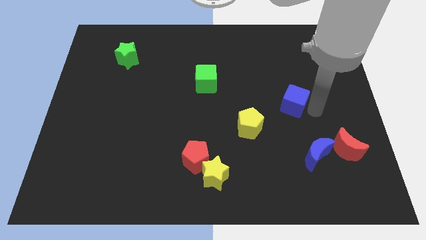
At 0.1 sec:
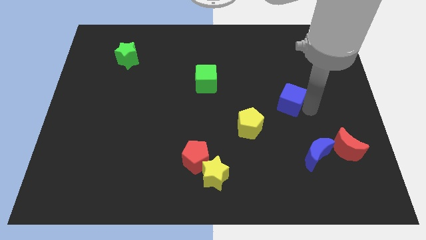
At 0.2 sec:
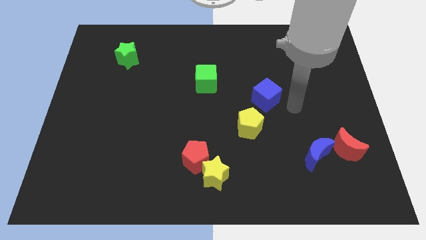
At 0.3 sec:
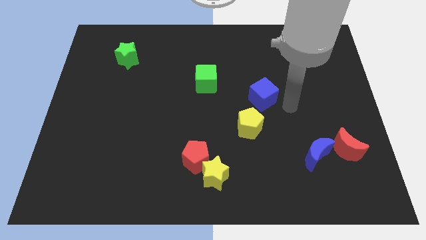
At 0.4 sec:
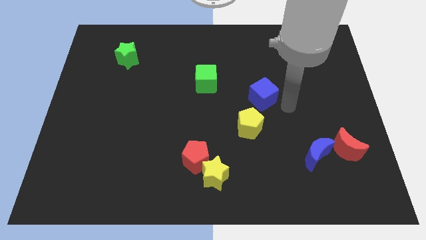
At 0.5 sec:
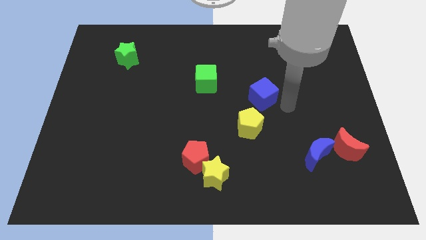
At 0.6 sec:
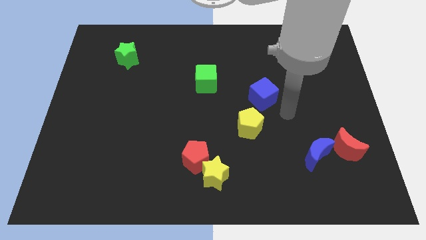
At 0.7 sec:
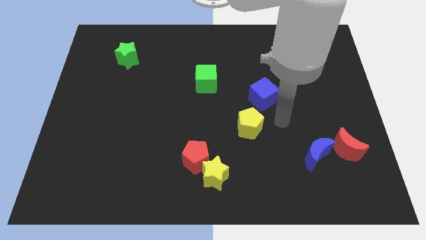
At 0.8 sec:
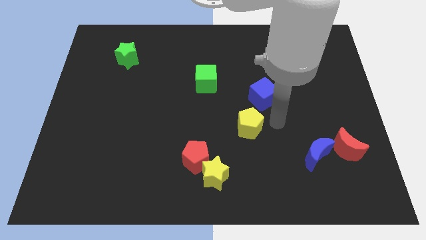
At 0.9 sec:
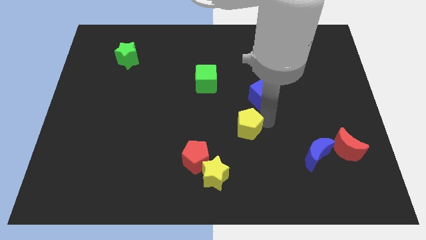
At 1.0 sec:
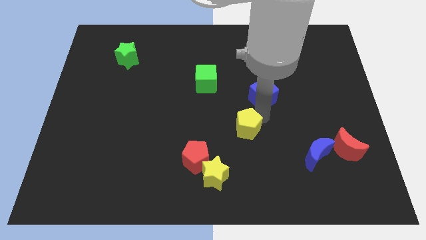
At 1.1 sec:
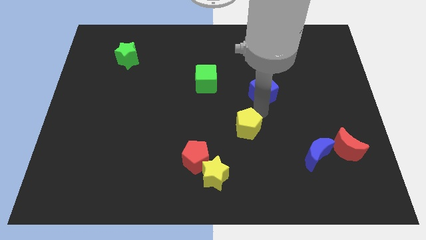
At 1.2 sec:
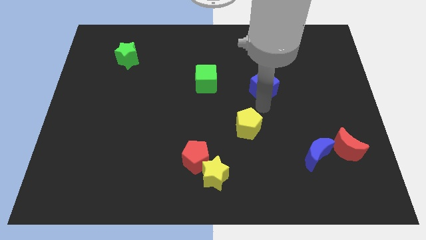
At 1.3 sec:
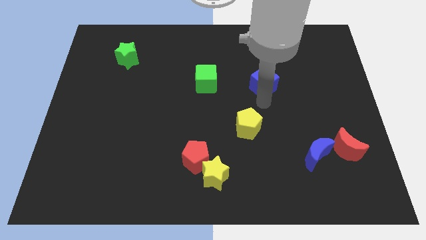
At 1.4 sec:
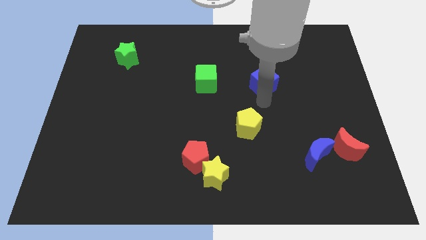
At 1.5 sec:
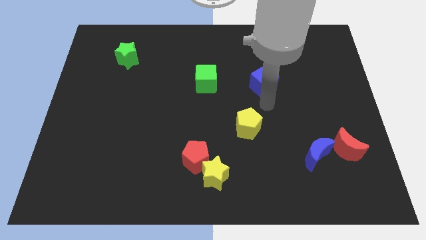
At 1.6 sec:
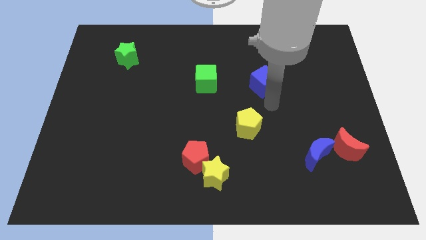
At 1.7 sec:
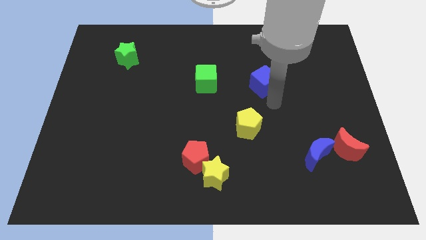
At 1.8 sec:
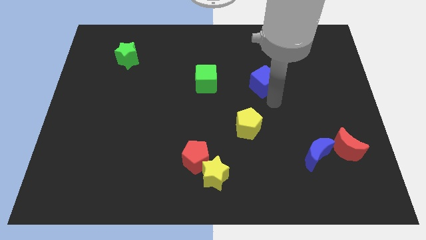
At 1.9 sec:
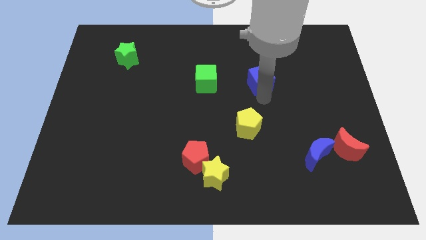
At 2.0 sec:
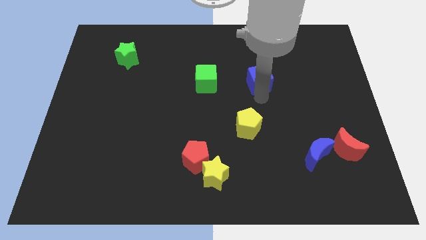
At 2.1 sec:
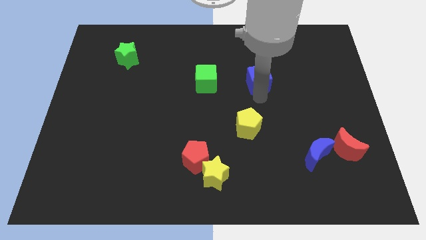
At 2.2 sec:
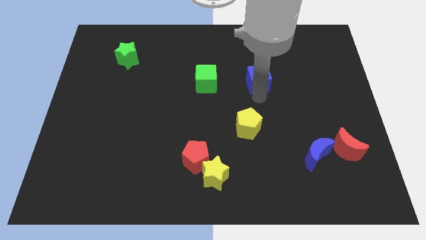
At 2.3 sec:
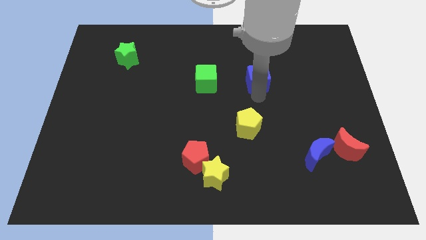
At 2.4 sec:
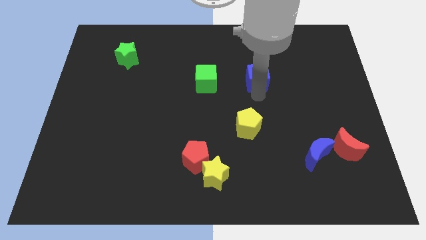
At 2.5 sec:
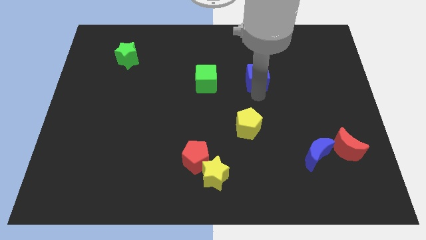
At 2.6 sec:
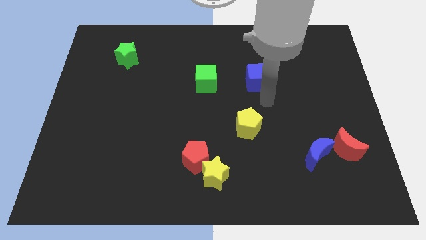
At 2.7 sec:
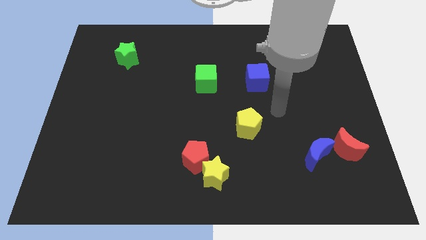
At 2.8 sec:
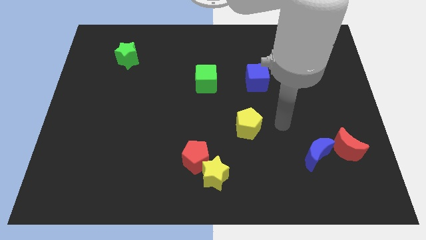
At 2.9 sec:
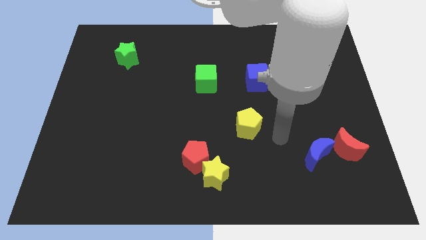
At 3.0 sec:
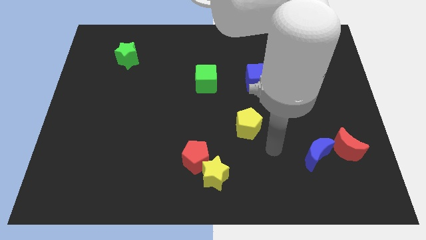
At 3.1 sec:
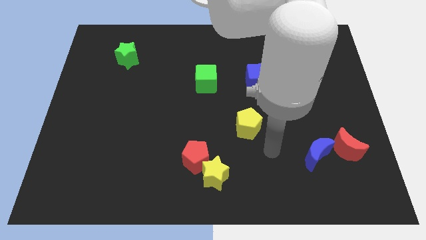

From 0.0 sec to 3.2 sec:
move your arm toward the bottom of the board

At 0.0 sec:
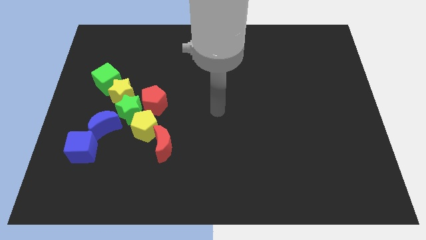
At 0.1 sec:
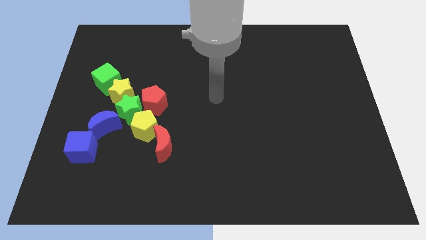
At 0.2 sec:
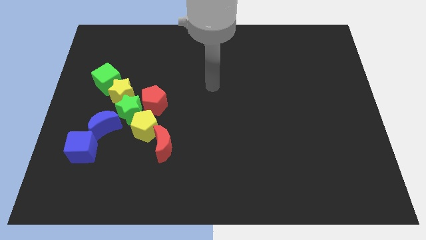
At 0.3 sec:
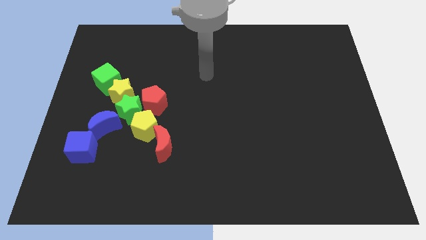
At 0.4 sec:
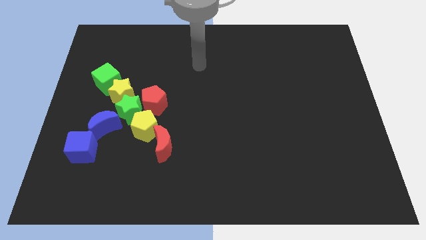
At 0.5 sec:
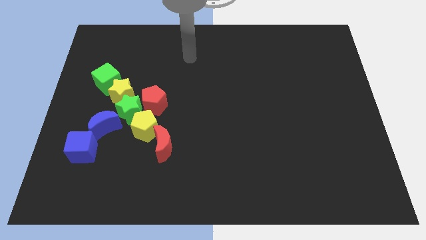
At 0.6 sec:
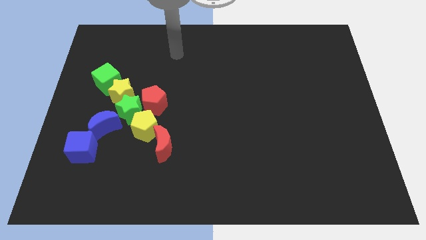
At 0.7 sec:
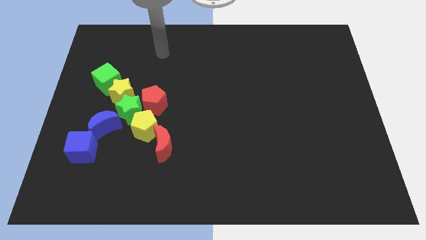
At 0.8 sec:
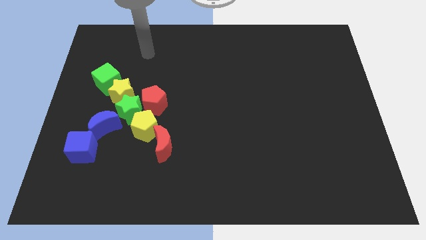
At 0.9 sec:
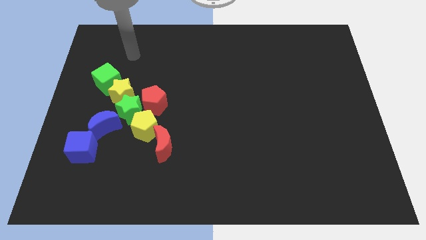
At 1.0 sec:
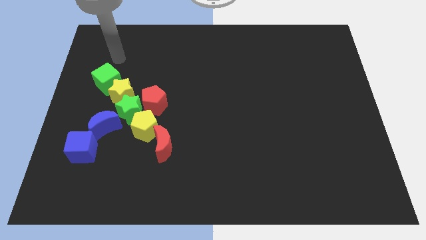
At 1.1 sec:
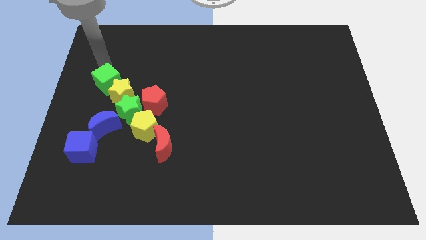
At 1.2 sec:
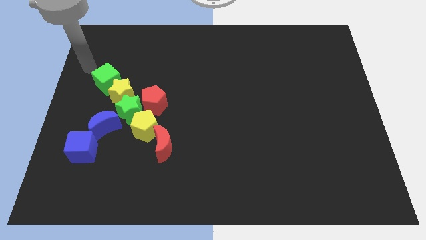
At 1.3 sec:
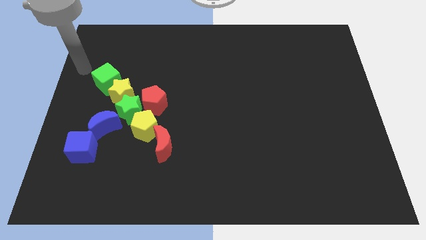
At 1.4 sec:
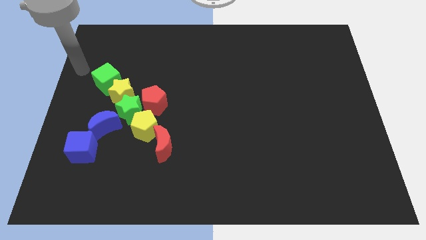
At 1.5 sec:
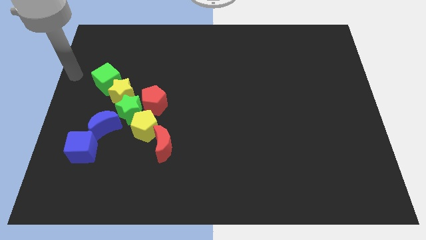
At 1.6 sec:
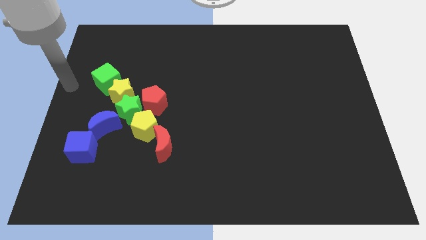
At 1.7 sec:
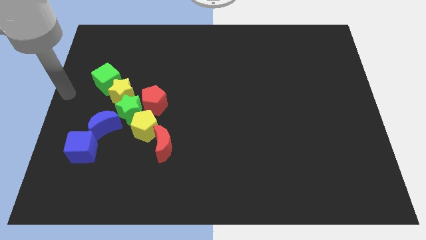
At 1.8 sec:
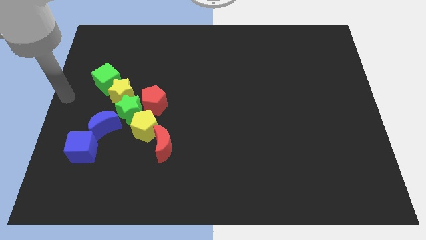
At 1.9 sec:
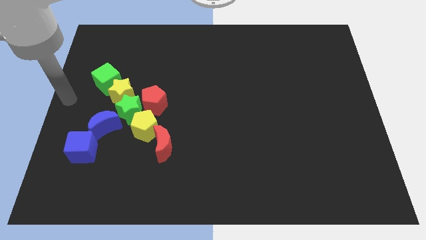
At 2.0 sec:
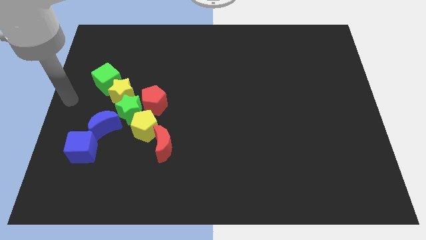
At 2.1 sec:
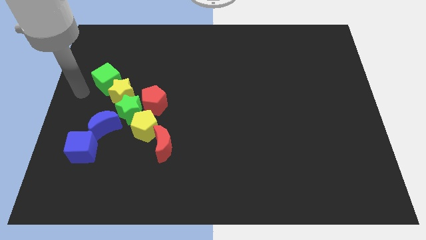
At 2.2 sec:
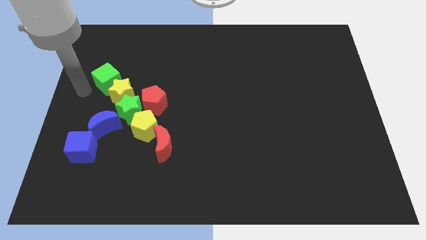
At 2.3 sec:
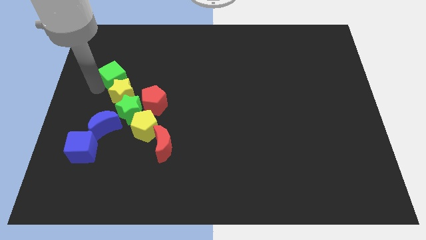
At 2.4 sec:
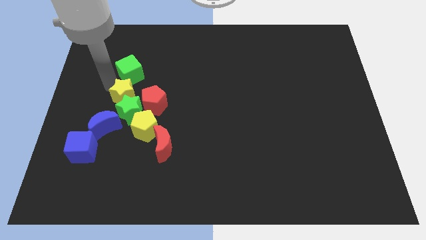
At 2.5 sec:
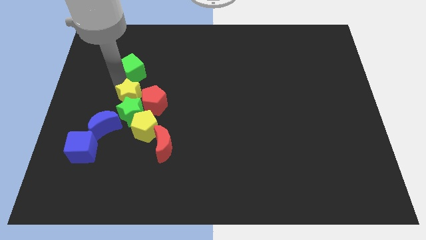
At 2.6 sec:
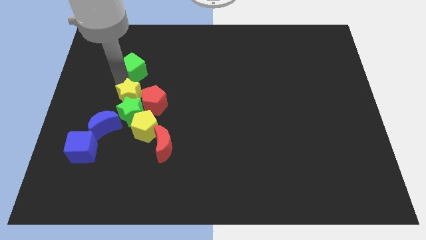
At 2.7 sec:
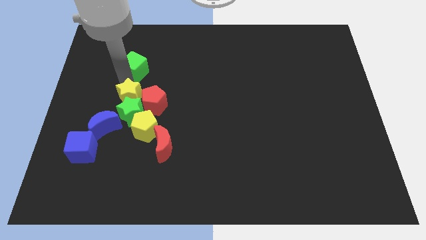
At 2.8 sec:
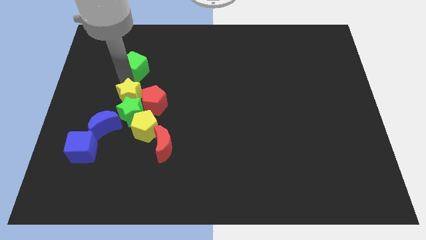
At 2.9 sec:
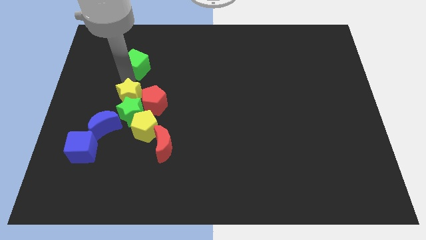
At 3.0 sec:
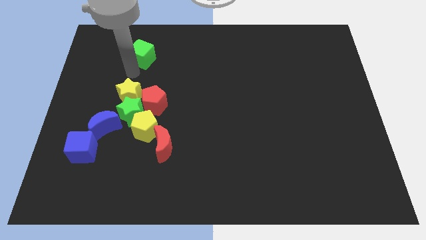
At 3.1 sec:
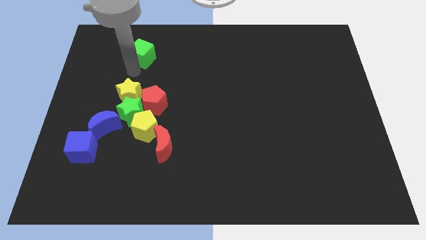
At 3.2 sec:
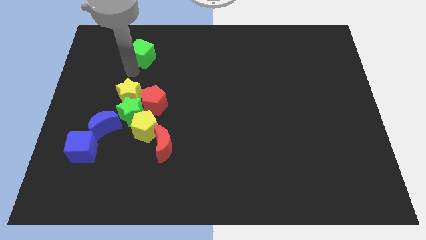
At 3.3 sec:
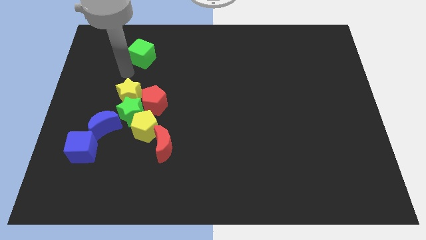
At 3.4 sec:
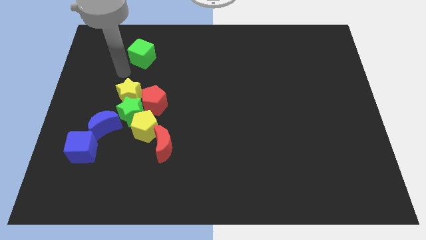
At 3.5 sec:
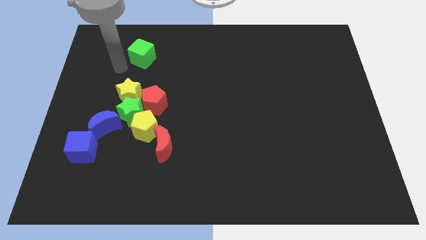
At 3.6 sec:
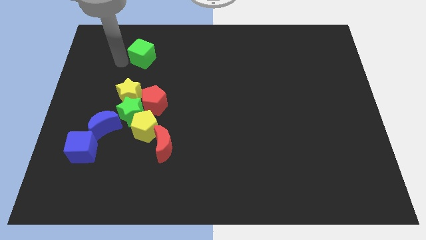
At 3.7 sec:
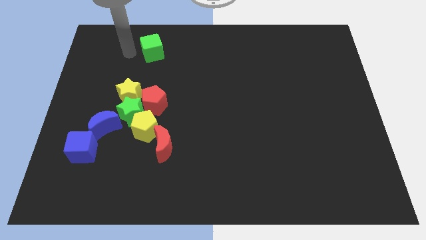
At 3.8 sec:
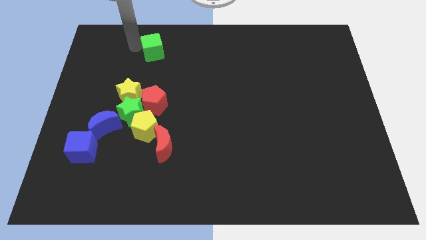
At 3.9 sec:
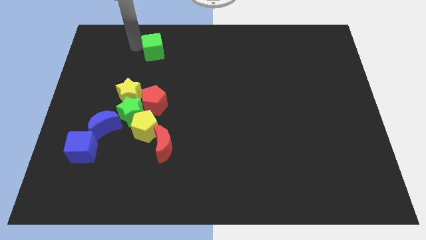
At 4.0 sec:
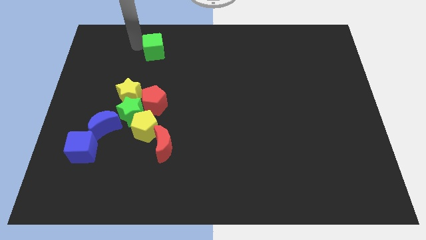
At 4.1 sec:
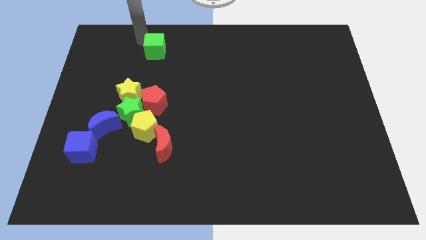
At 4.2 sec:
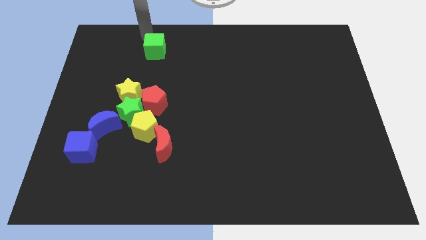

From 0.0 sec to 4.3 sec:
push the green cube to the top of the board

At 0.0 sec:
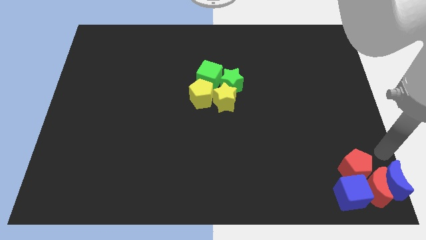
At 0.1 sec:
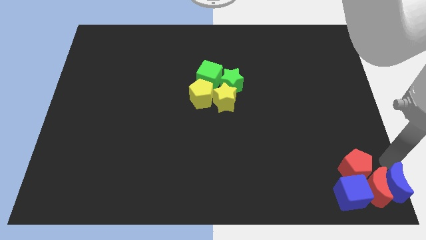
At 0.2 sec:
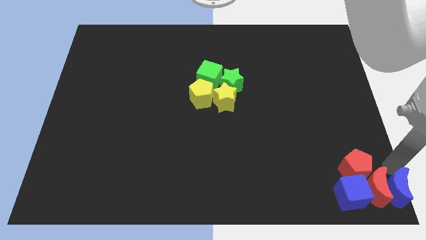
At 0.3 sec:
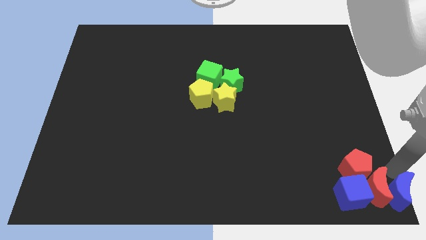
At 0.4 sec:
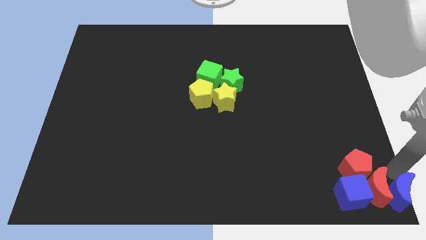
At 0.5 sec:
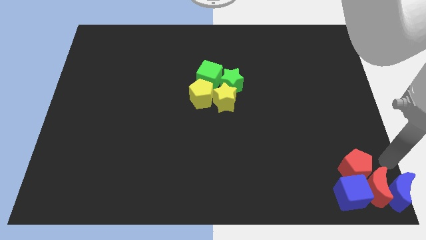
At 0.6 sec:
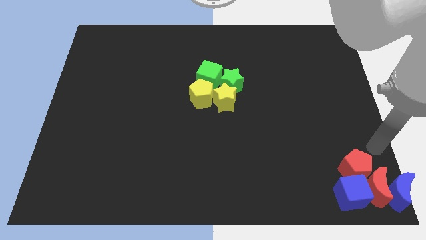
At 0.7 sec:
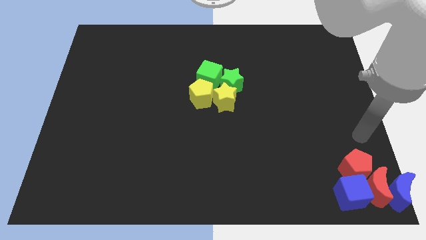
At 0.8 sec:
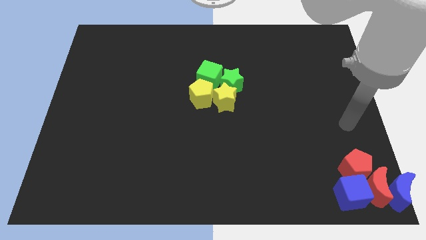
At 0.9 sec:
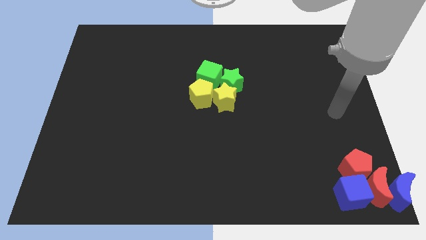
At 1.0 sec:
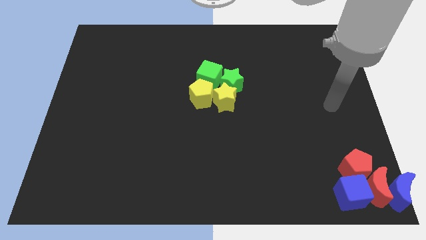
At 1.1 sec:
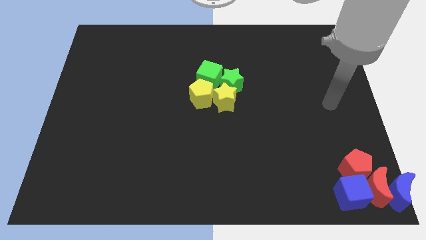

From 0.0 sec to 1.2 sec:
push the blue crescent to the bottom right corner

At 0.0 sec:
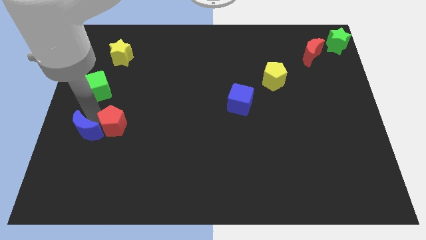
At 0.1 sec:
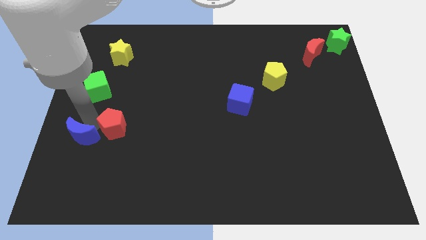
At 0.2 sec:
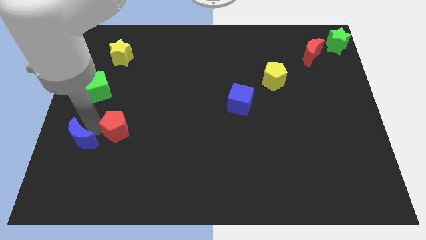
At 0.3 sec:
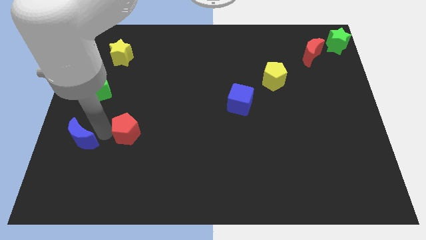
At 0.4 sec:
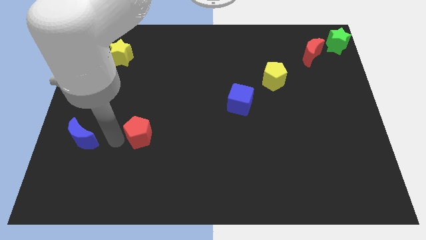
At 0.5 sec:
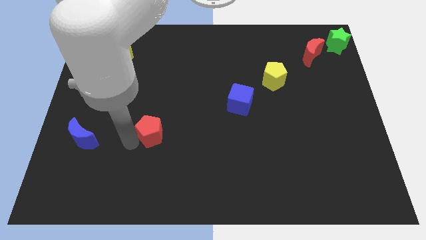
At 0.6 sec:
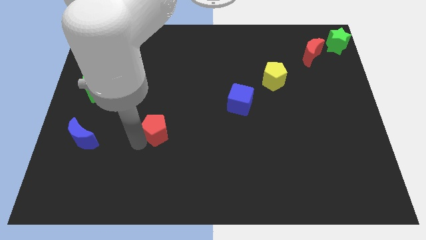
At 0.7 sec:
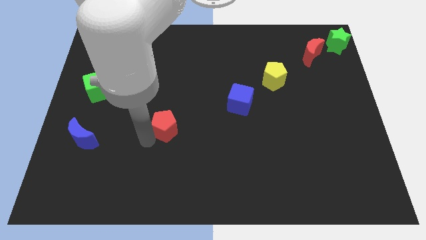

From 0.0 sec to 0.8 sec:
separate red pentagon from blue crescent
